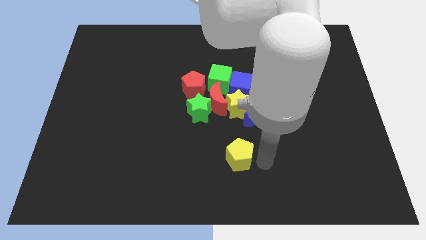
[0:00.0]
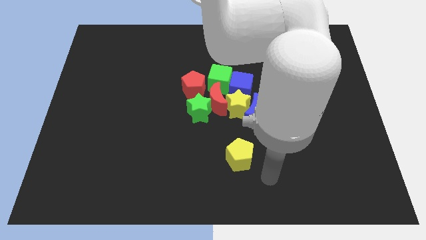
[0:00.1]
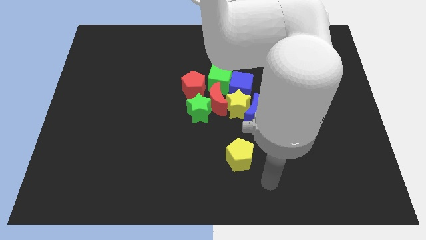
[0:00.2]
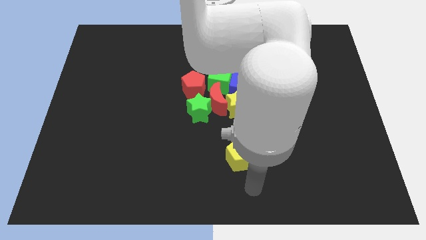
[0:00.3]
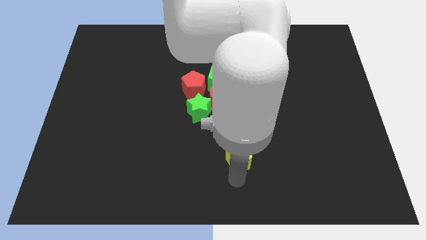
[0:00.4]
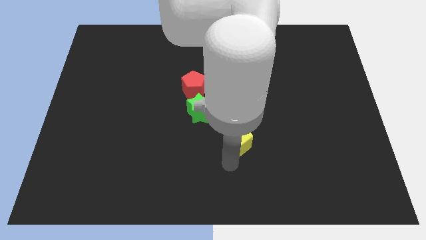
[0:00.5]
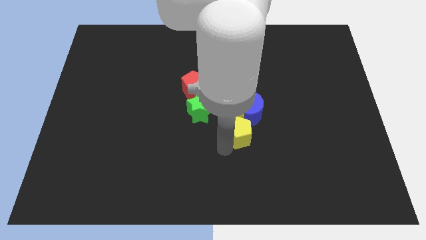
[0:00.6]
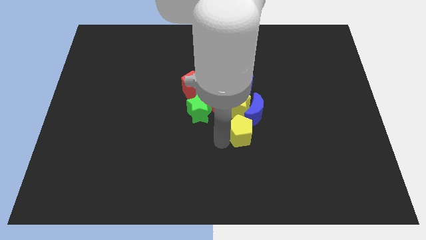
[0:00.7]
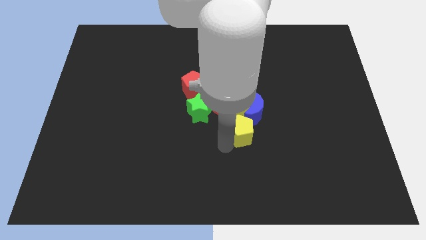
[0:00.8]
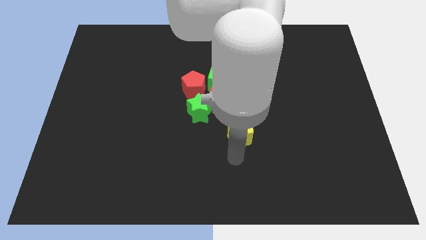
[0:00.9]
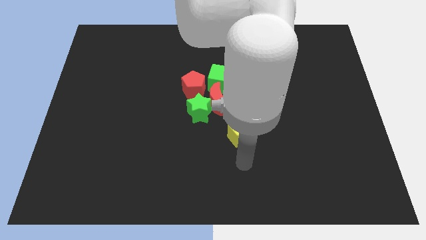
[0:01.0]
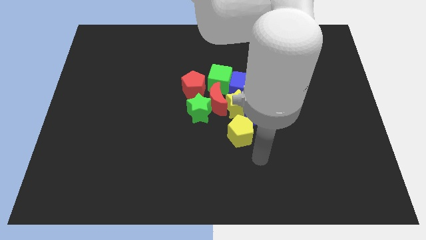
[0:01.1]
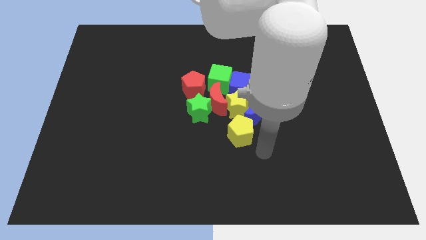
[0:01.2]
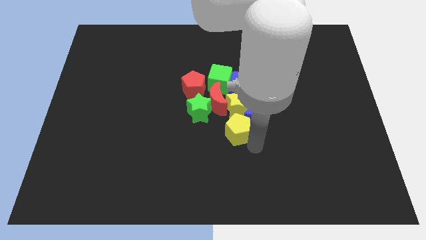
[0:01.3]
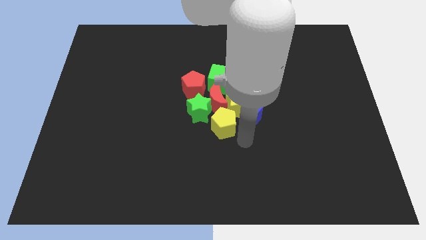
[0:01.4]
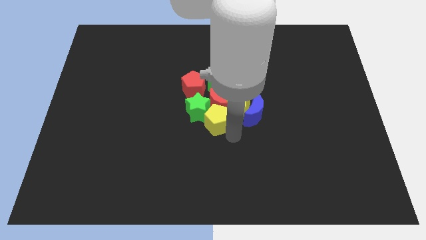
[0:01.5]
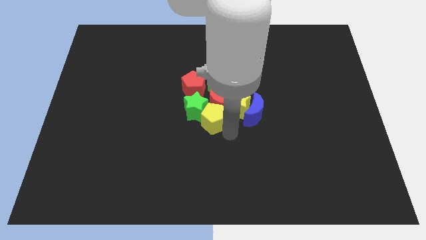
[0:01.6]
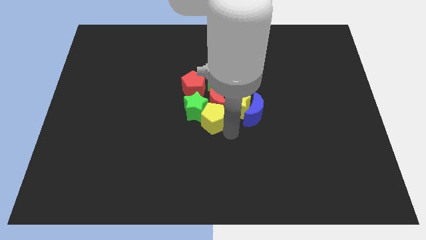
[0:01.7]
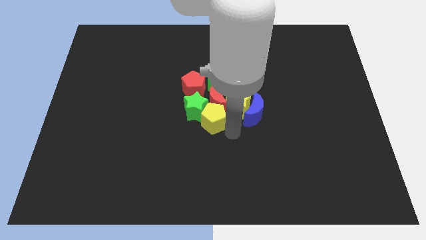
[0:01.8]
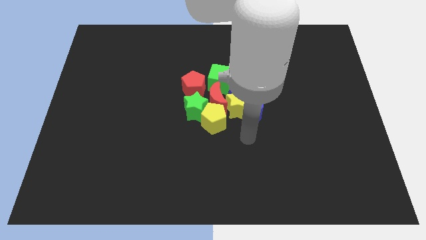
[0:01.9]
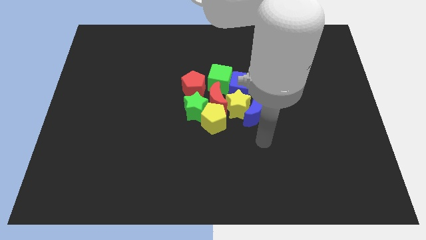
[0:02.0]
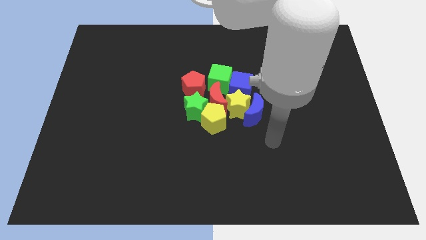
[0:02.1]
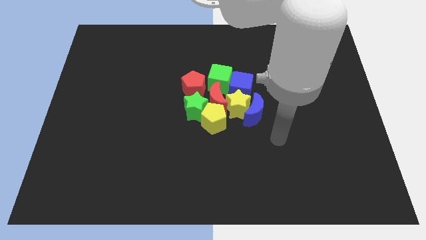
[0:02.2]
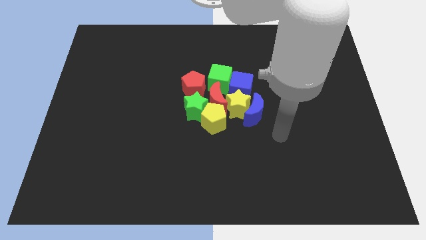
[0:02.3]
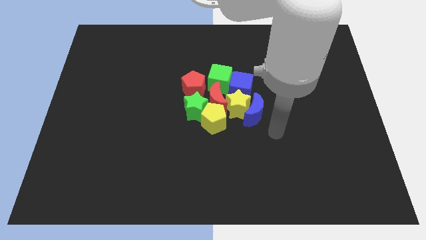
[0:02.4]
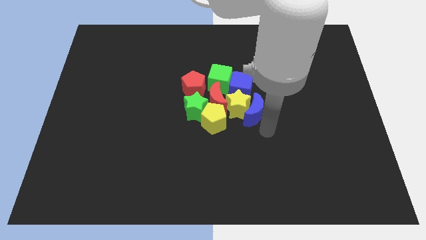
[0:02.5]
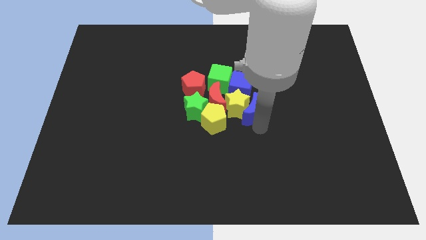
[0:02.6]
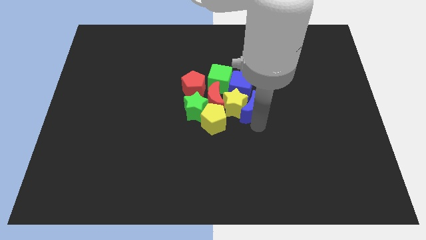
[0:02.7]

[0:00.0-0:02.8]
place the yellow pentagon below the red moon

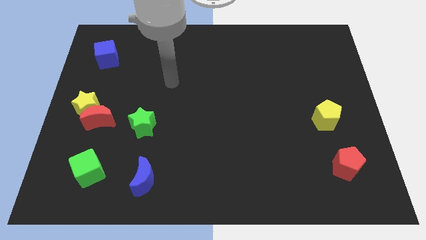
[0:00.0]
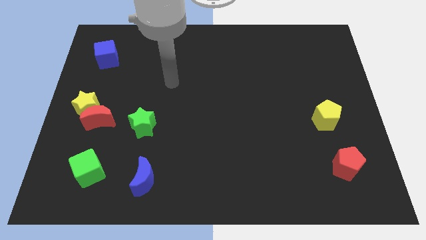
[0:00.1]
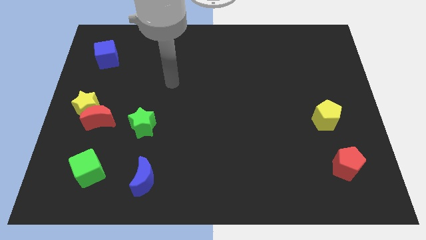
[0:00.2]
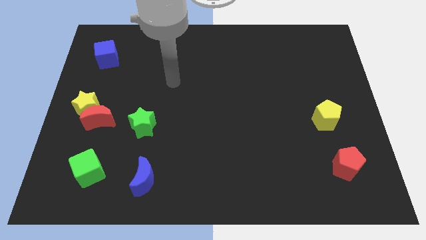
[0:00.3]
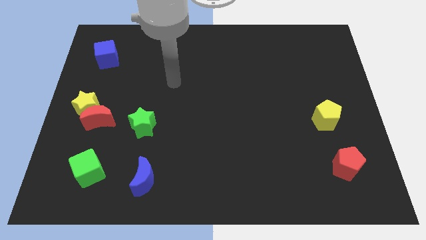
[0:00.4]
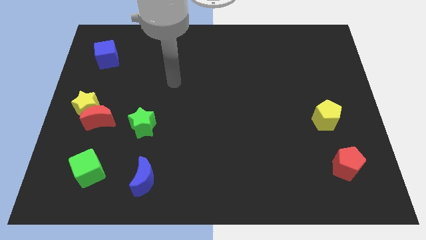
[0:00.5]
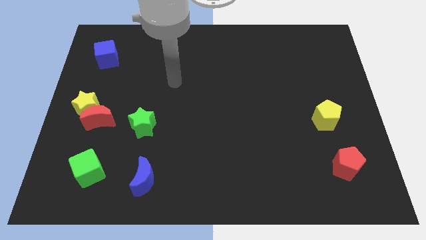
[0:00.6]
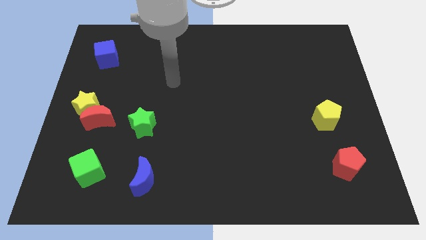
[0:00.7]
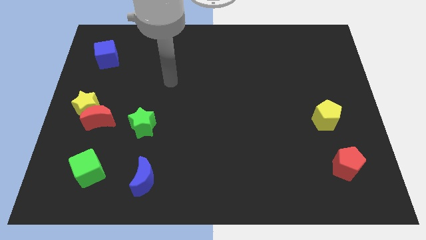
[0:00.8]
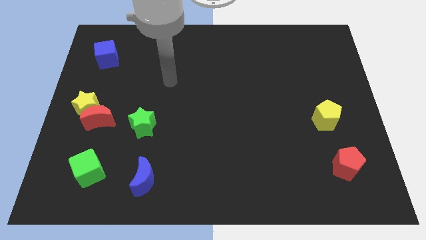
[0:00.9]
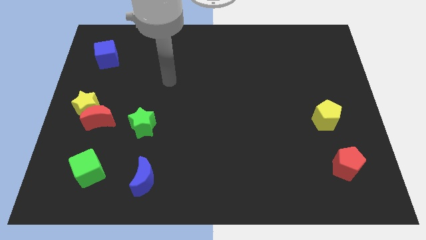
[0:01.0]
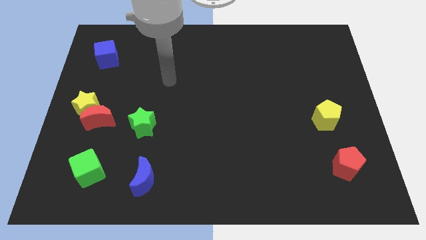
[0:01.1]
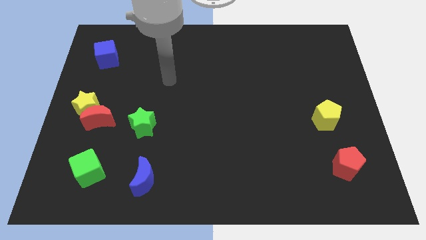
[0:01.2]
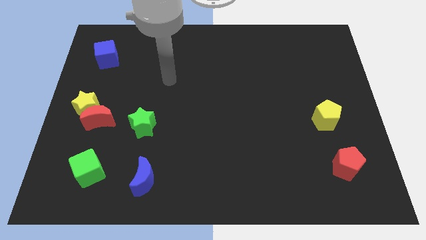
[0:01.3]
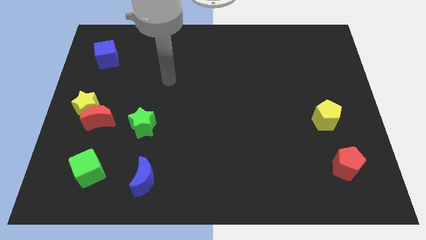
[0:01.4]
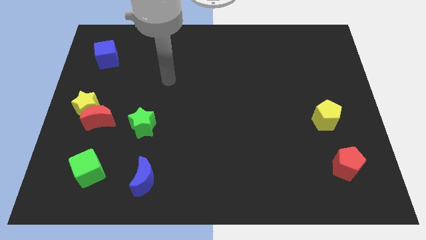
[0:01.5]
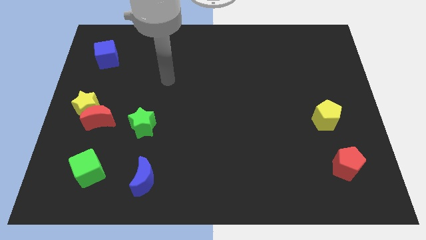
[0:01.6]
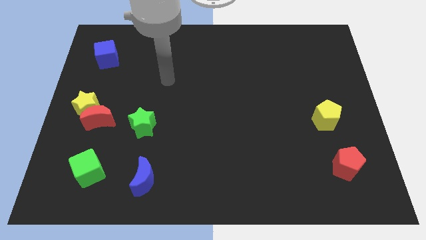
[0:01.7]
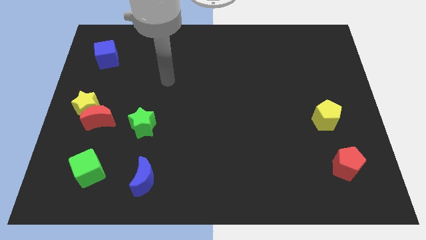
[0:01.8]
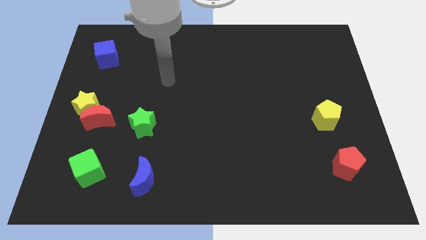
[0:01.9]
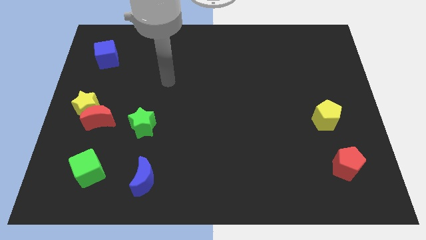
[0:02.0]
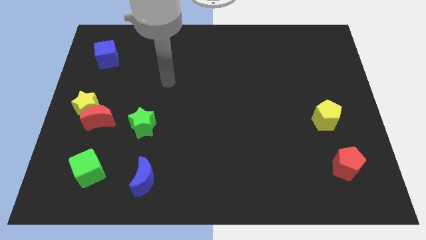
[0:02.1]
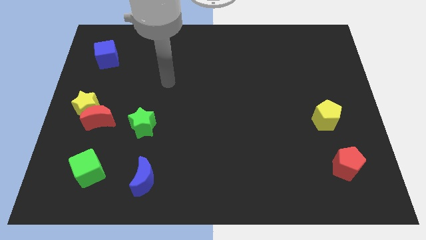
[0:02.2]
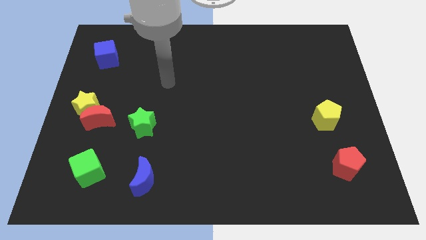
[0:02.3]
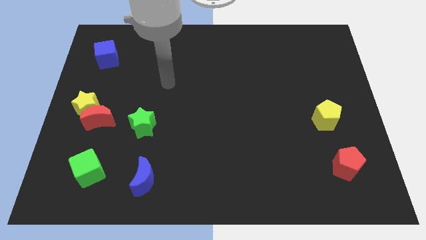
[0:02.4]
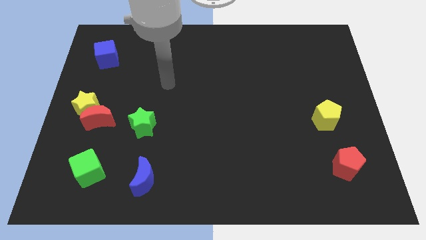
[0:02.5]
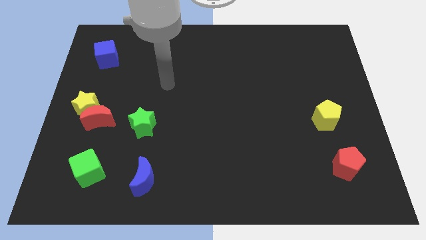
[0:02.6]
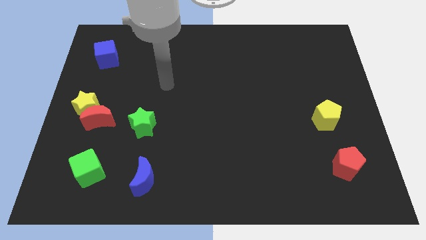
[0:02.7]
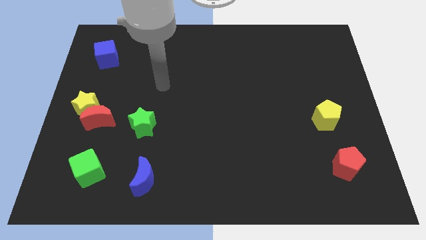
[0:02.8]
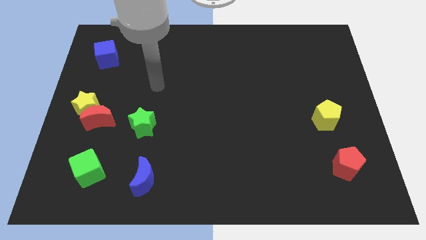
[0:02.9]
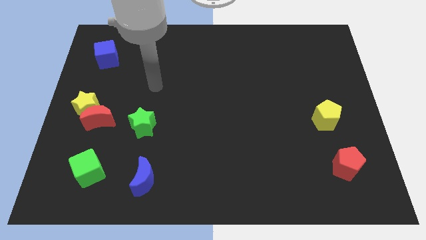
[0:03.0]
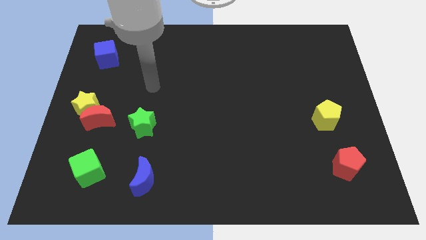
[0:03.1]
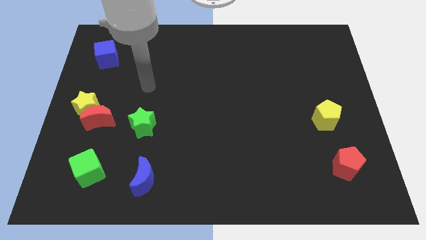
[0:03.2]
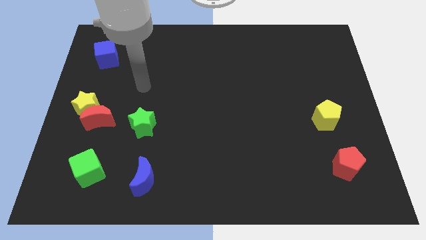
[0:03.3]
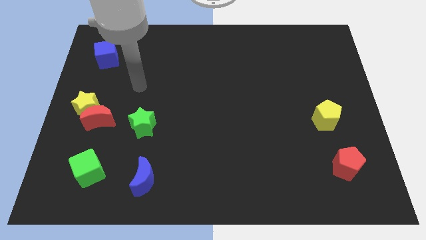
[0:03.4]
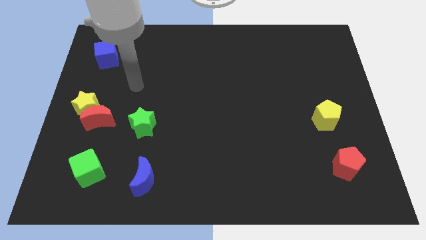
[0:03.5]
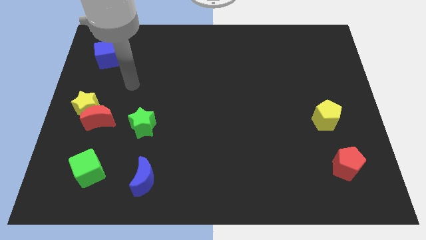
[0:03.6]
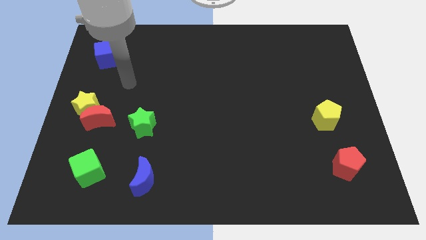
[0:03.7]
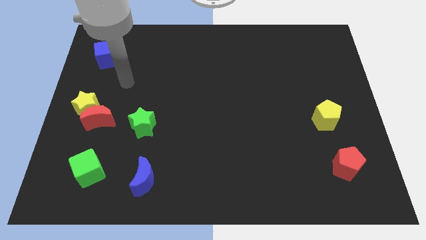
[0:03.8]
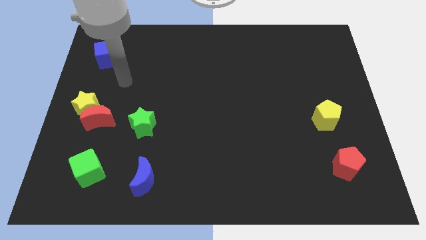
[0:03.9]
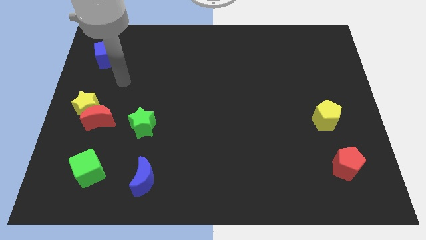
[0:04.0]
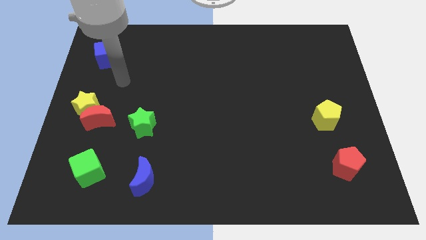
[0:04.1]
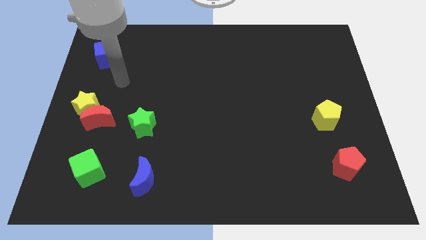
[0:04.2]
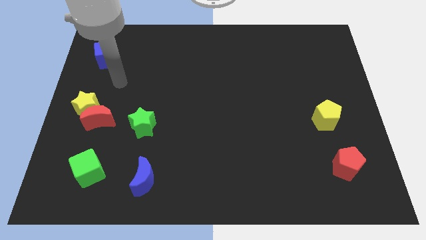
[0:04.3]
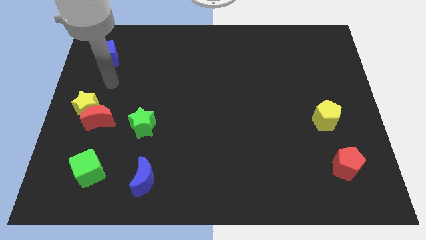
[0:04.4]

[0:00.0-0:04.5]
place your hand vertically below the blue cube

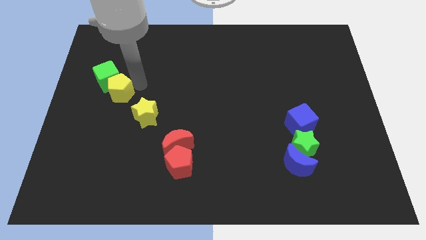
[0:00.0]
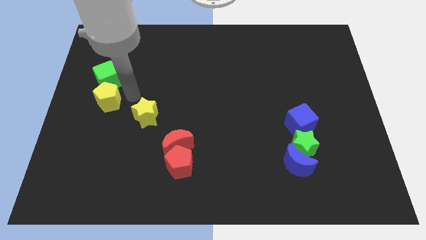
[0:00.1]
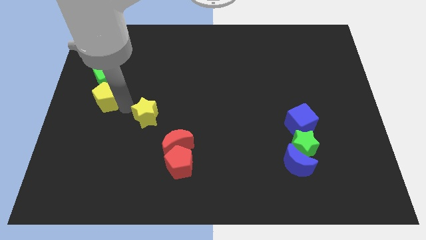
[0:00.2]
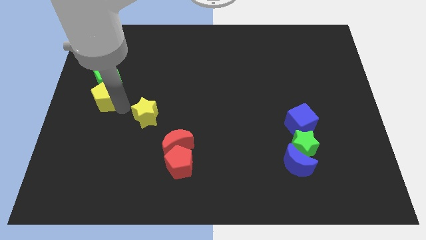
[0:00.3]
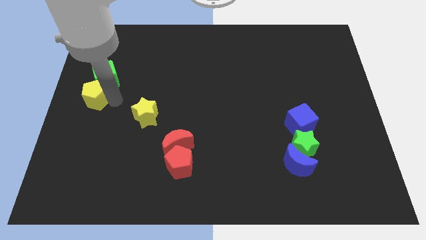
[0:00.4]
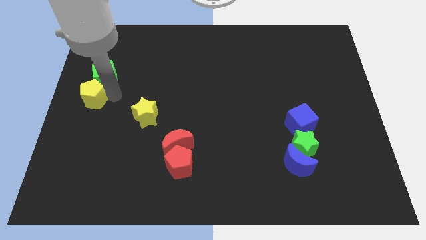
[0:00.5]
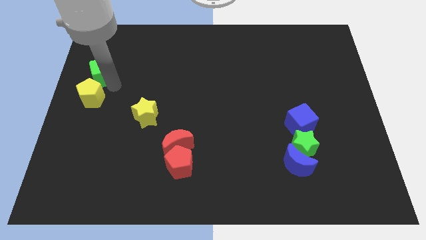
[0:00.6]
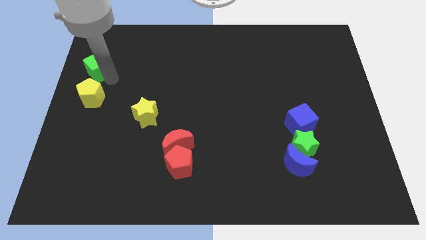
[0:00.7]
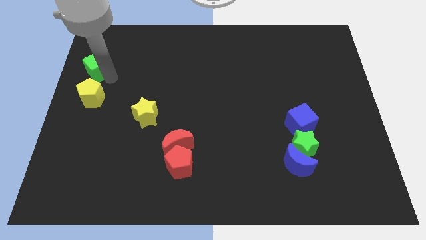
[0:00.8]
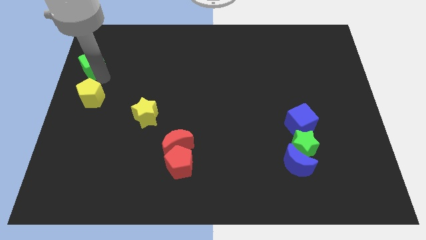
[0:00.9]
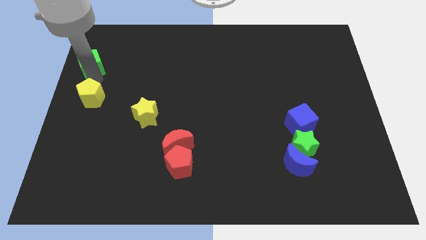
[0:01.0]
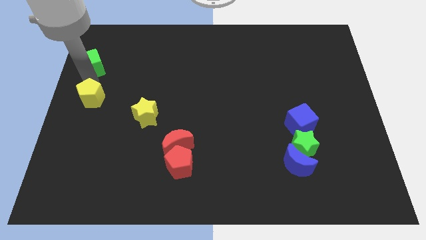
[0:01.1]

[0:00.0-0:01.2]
place your hand in between the green cube and yellow pentagon

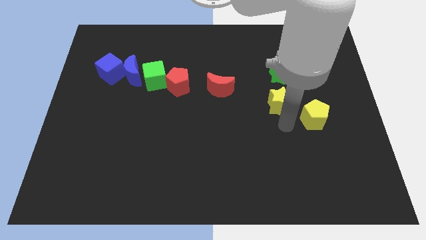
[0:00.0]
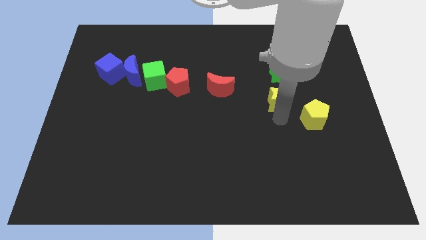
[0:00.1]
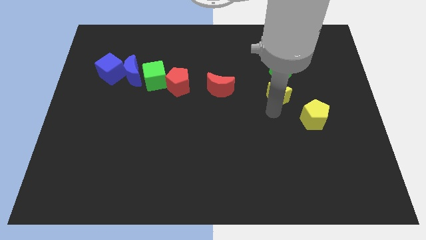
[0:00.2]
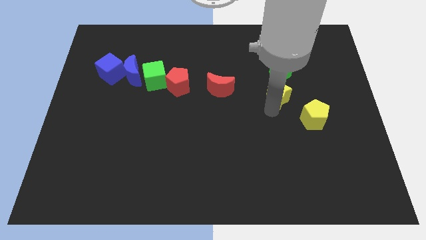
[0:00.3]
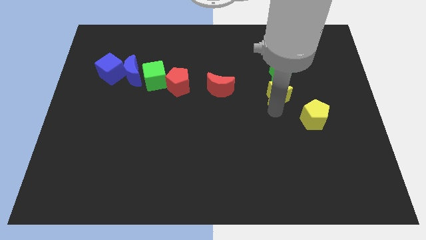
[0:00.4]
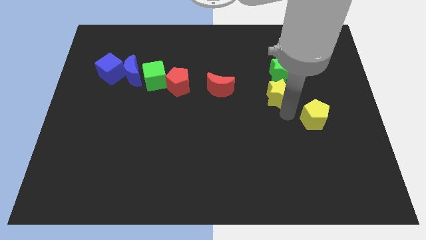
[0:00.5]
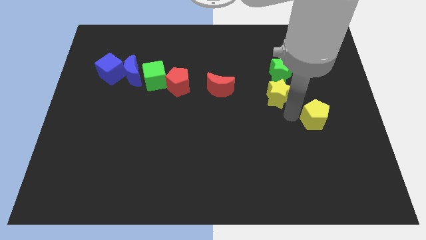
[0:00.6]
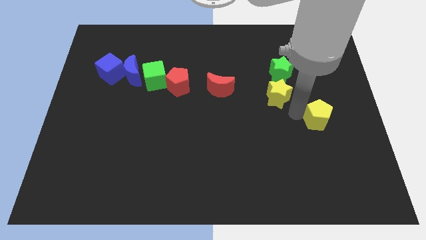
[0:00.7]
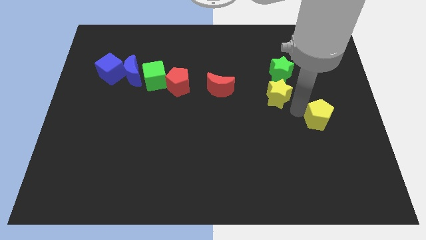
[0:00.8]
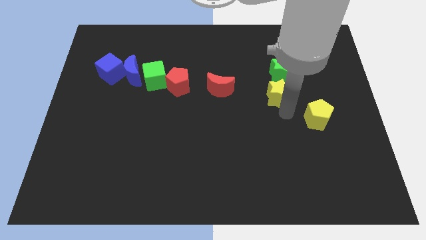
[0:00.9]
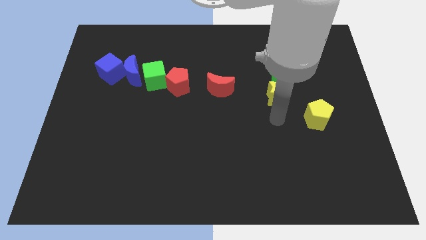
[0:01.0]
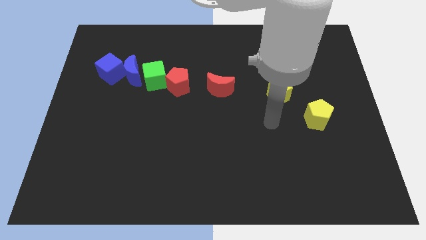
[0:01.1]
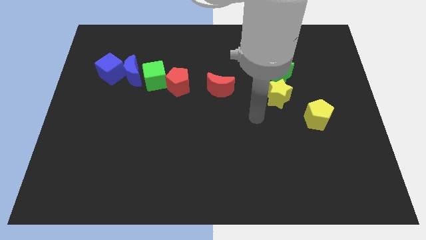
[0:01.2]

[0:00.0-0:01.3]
place the yellow star below the green star
